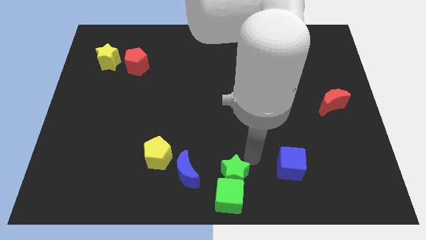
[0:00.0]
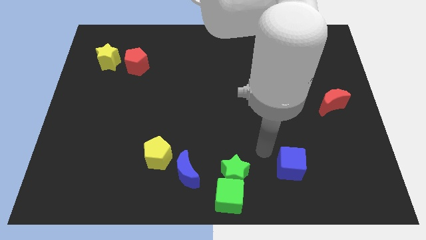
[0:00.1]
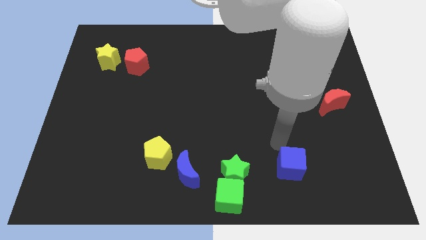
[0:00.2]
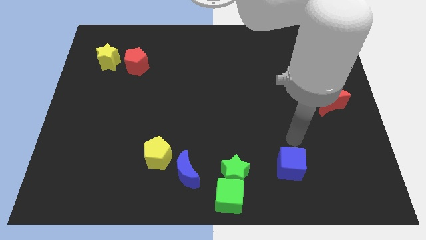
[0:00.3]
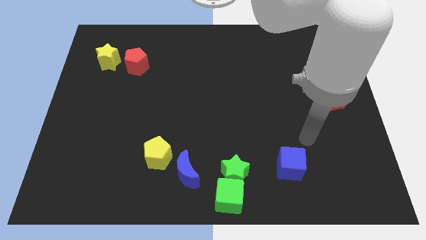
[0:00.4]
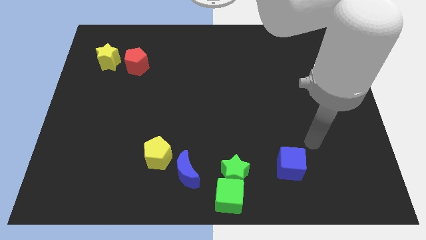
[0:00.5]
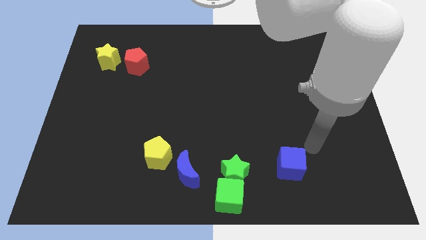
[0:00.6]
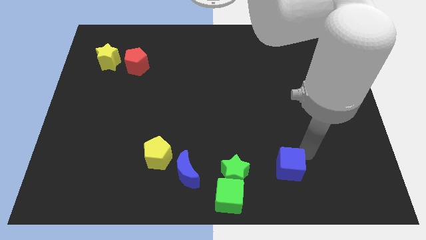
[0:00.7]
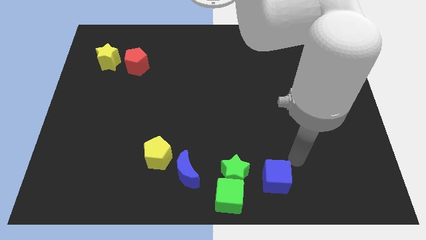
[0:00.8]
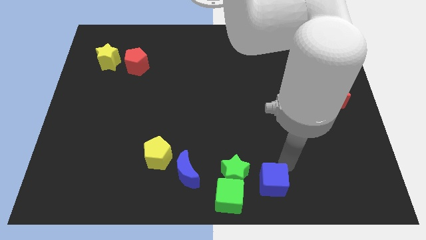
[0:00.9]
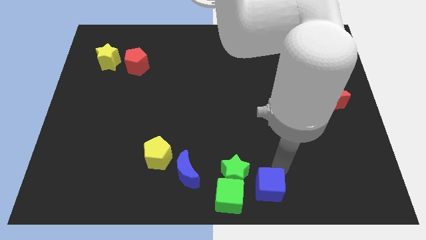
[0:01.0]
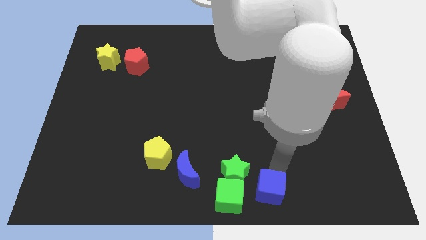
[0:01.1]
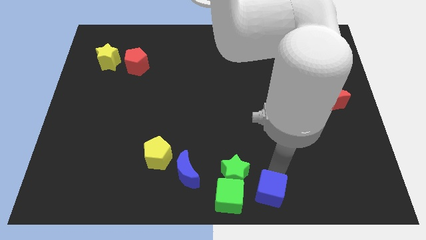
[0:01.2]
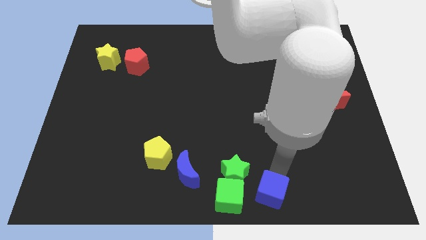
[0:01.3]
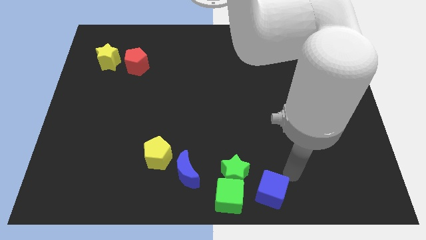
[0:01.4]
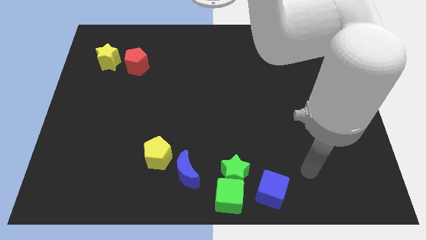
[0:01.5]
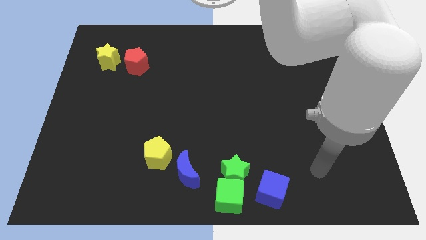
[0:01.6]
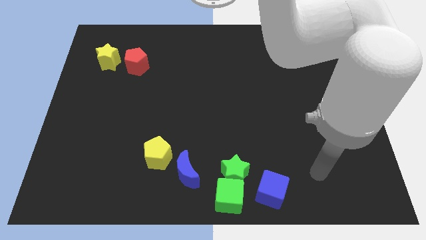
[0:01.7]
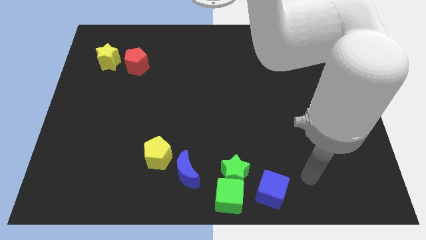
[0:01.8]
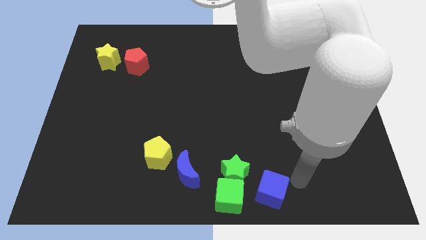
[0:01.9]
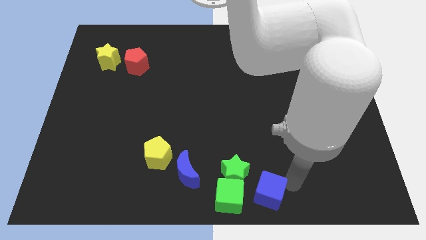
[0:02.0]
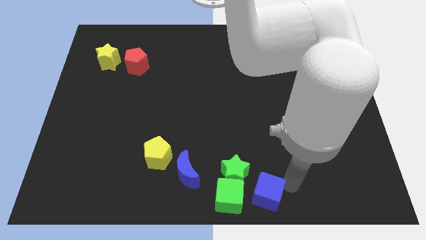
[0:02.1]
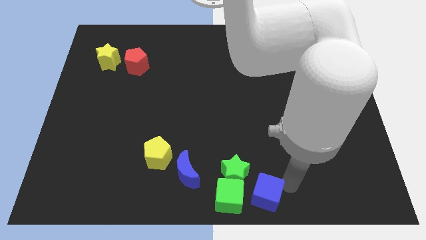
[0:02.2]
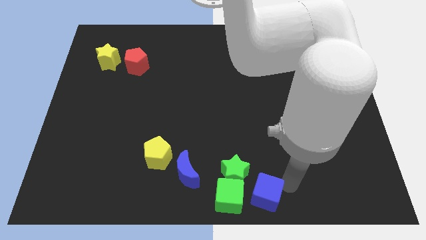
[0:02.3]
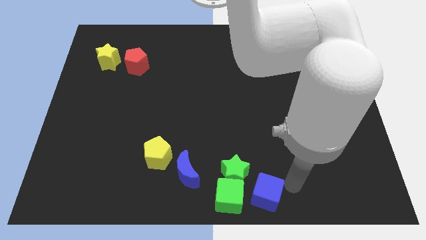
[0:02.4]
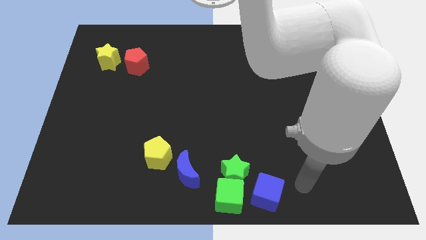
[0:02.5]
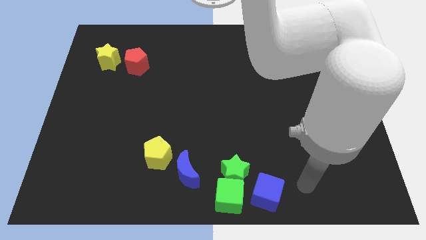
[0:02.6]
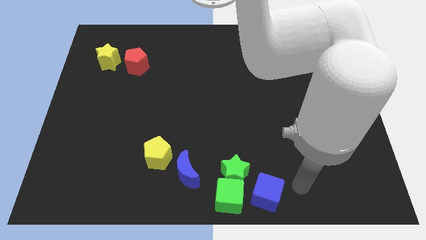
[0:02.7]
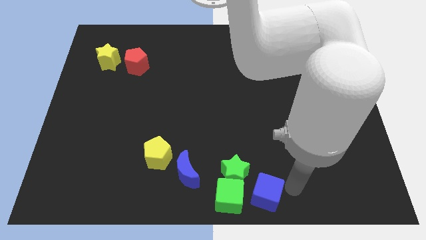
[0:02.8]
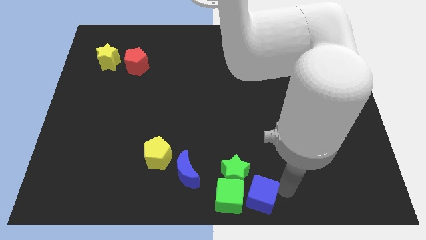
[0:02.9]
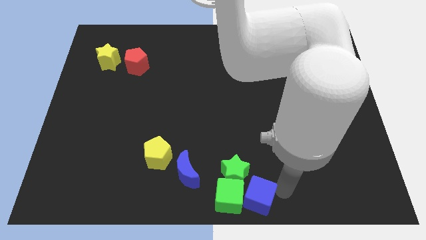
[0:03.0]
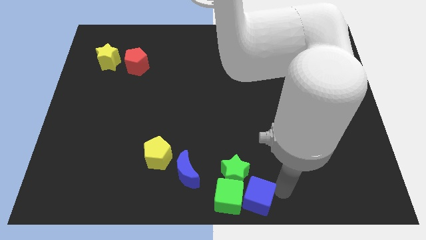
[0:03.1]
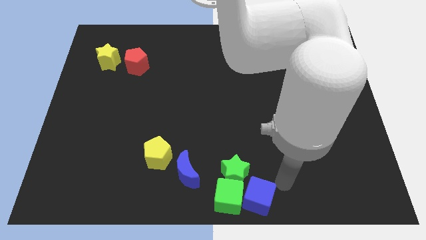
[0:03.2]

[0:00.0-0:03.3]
move the blue cube close to the right side of the green cube

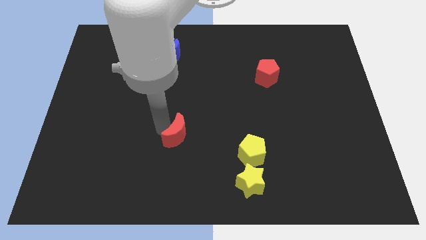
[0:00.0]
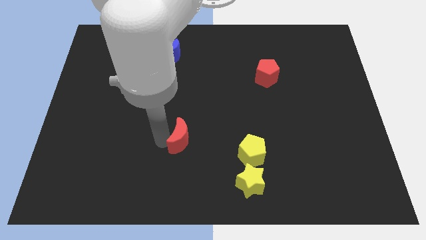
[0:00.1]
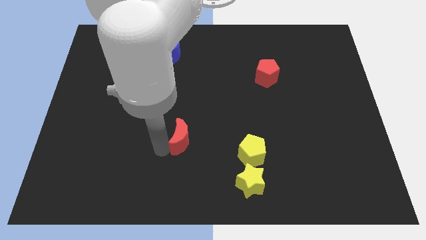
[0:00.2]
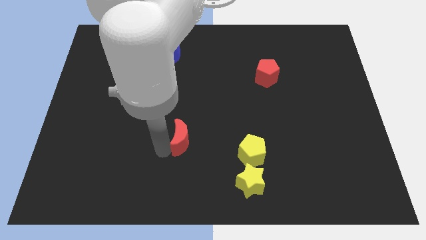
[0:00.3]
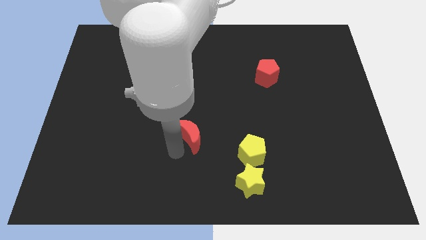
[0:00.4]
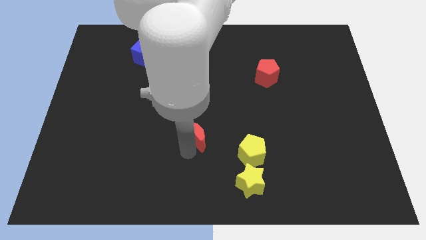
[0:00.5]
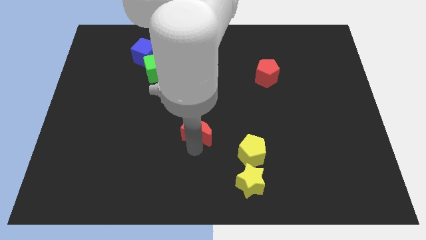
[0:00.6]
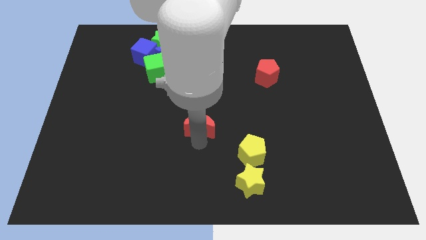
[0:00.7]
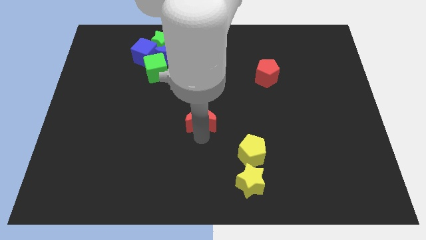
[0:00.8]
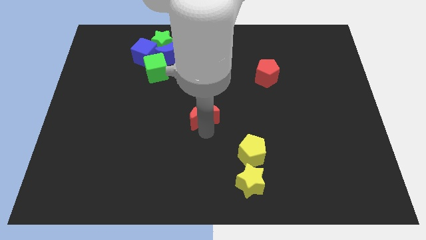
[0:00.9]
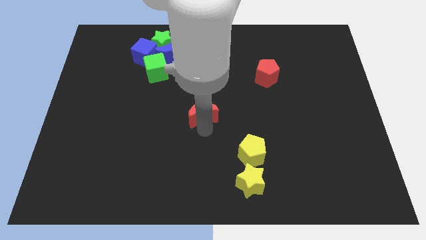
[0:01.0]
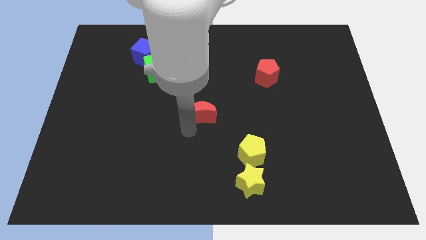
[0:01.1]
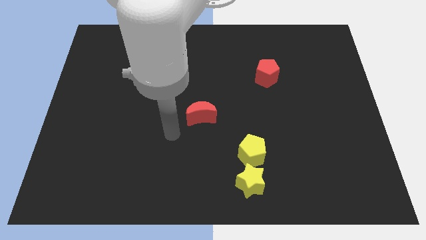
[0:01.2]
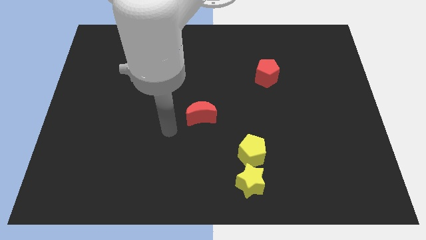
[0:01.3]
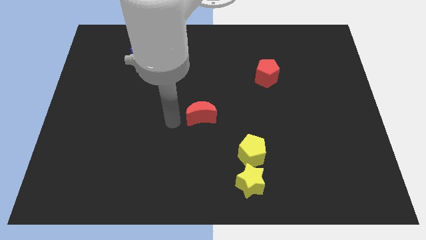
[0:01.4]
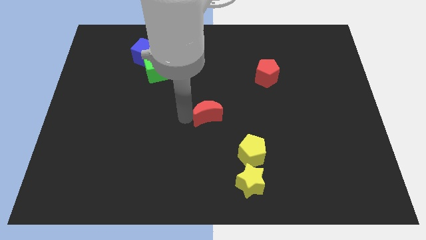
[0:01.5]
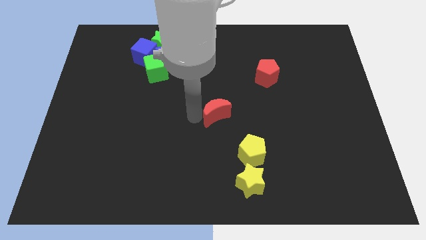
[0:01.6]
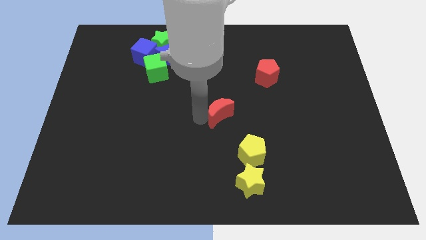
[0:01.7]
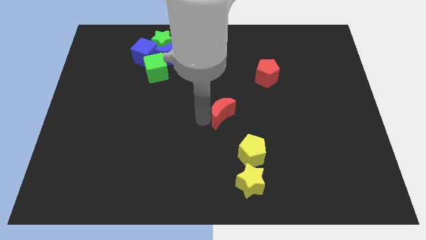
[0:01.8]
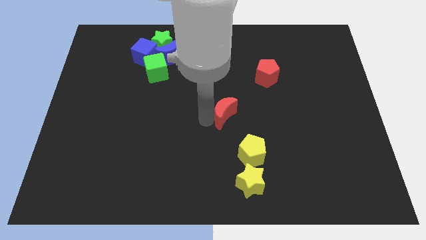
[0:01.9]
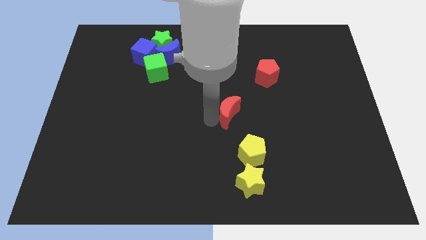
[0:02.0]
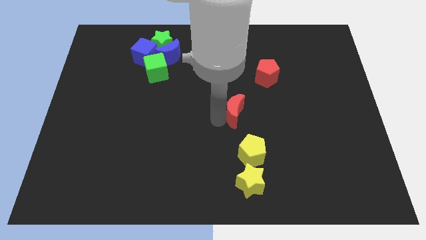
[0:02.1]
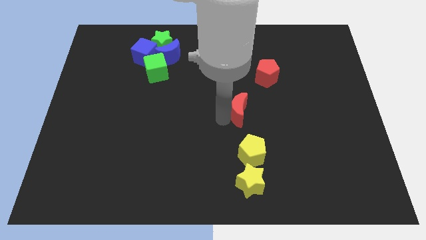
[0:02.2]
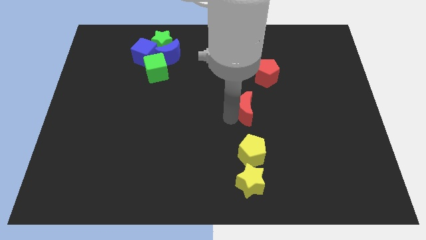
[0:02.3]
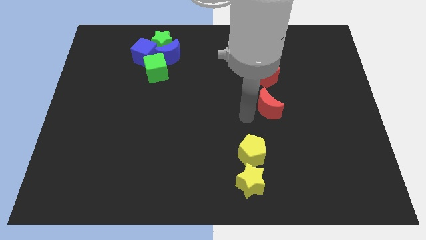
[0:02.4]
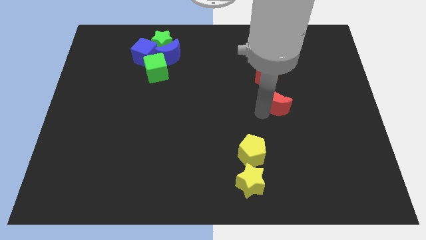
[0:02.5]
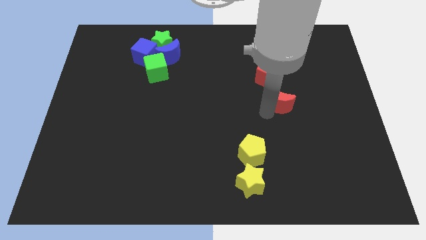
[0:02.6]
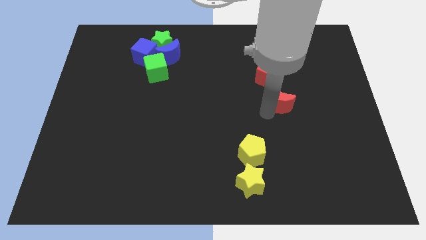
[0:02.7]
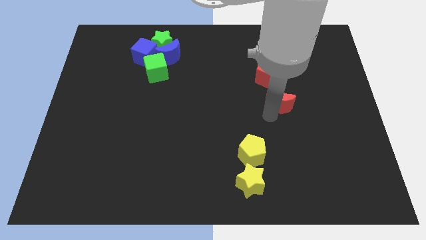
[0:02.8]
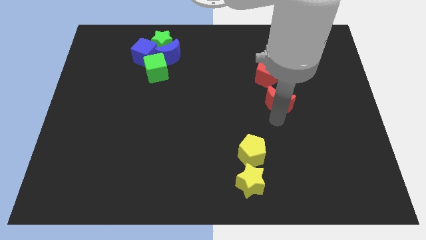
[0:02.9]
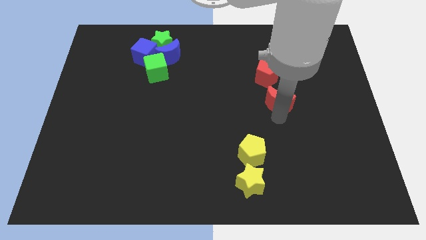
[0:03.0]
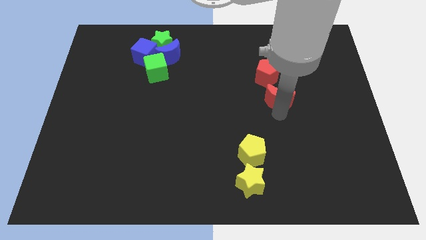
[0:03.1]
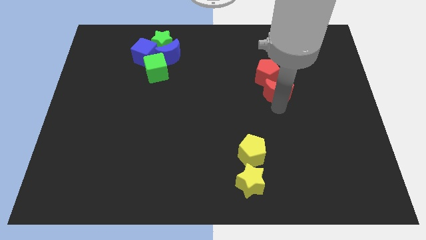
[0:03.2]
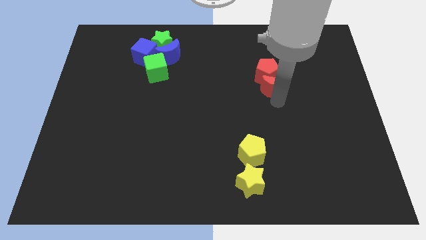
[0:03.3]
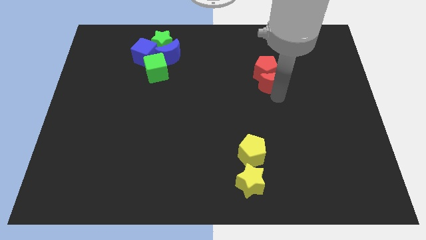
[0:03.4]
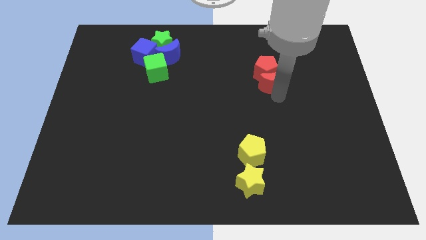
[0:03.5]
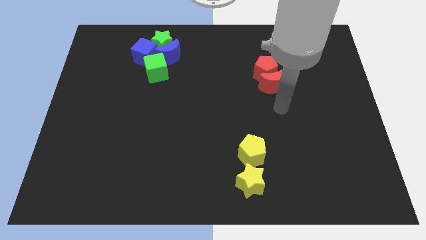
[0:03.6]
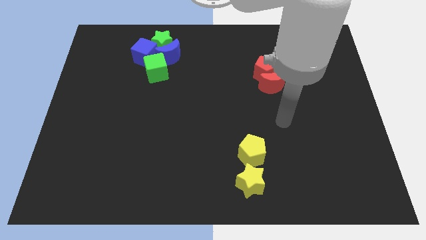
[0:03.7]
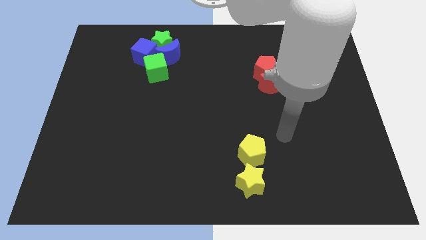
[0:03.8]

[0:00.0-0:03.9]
attach the red crescent to the red pentagon

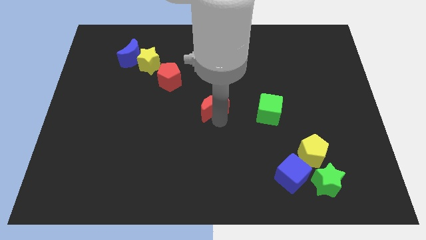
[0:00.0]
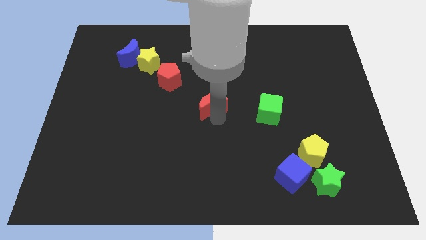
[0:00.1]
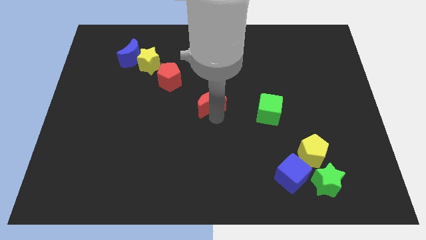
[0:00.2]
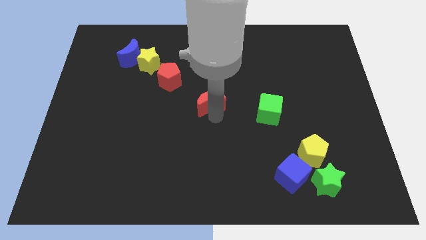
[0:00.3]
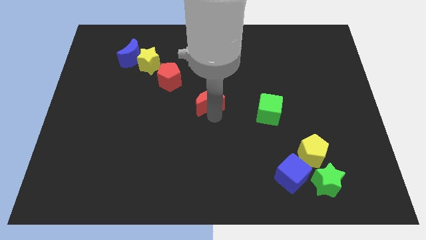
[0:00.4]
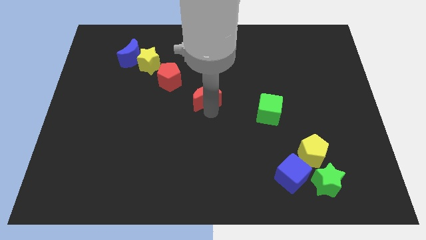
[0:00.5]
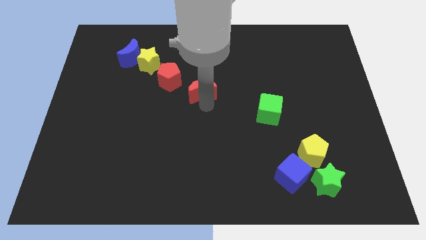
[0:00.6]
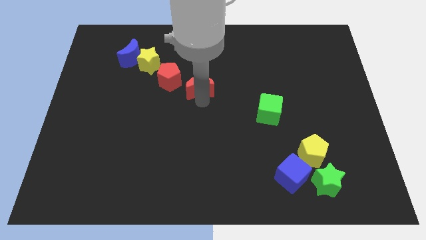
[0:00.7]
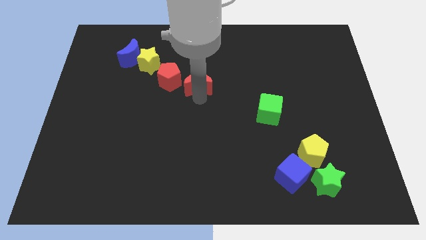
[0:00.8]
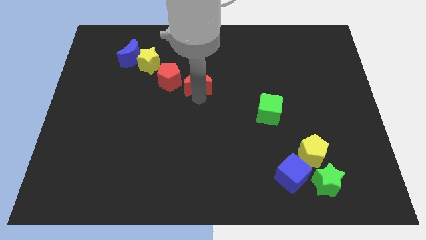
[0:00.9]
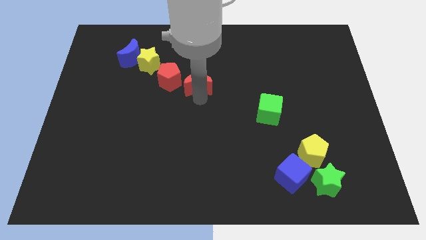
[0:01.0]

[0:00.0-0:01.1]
move the red moon close to the red pentagon

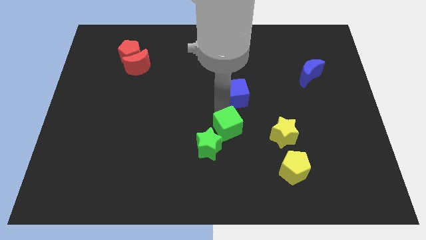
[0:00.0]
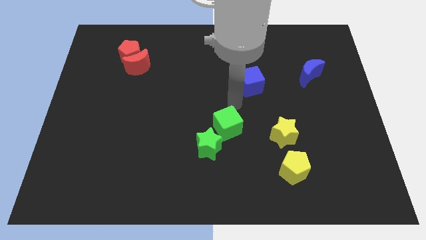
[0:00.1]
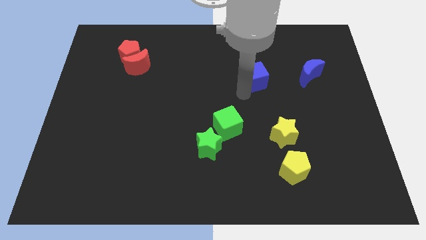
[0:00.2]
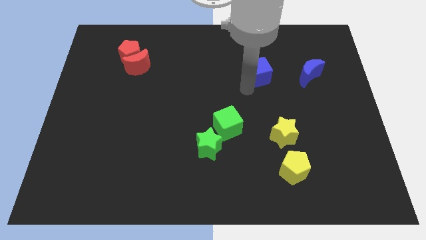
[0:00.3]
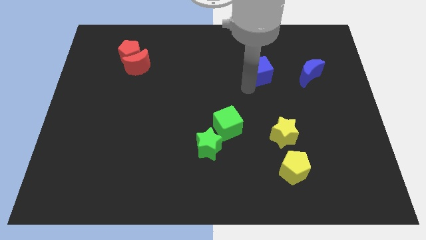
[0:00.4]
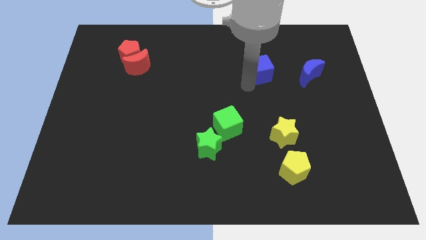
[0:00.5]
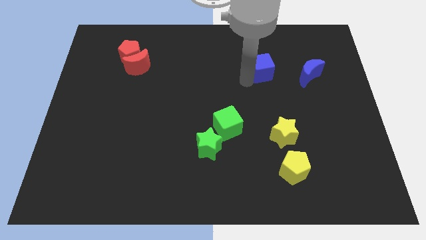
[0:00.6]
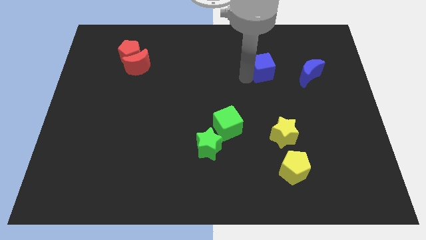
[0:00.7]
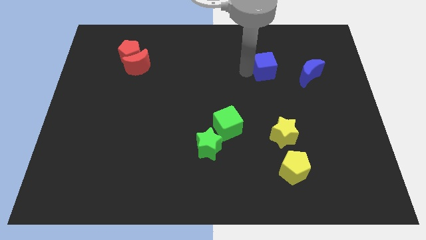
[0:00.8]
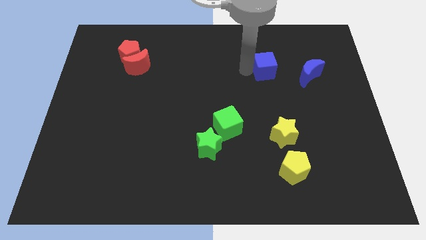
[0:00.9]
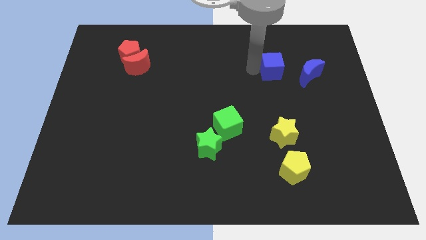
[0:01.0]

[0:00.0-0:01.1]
place the blue cube left to the blue moon
